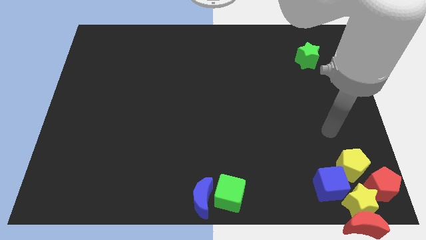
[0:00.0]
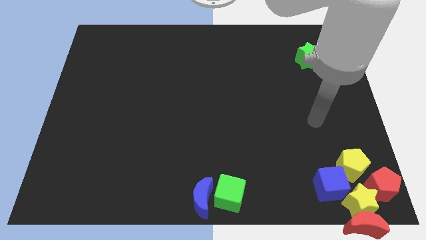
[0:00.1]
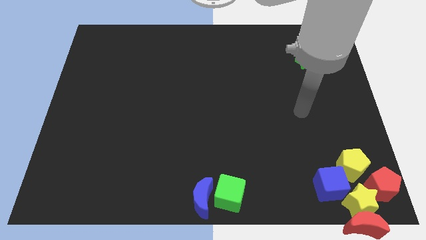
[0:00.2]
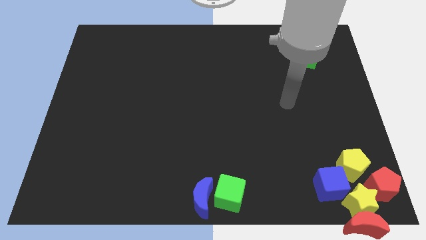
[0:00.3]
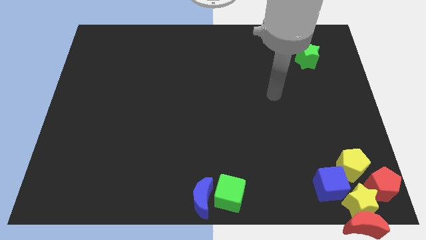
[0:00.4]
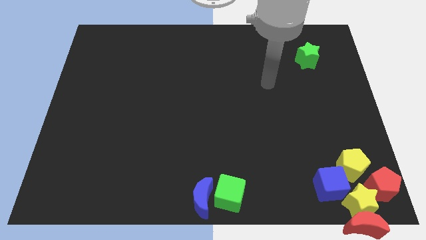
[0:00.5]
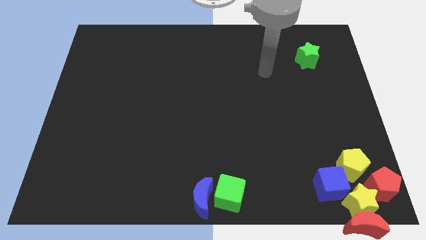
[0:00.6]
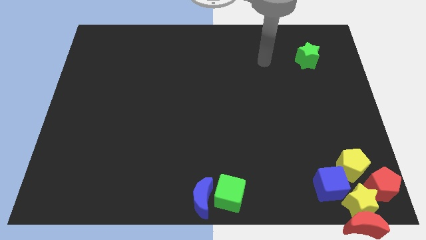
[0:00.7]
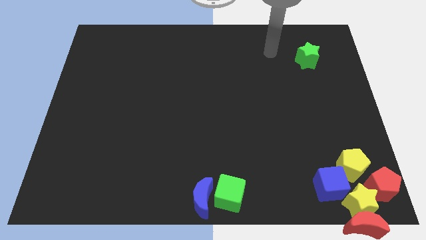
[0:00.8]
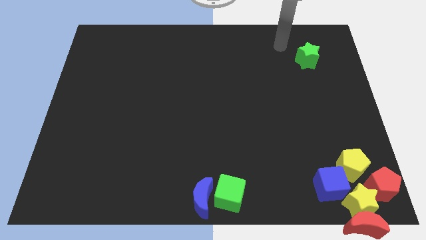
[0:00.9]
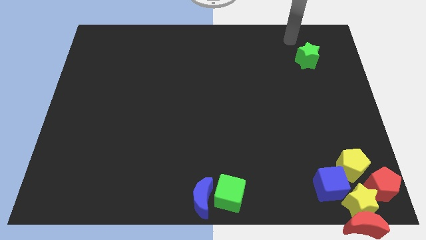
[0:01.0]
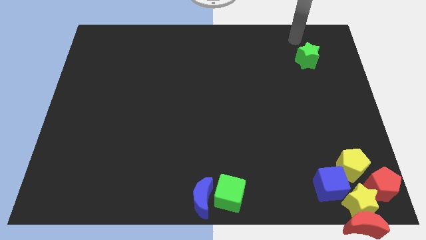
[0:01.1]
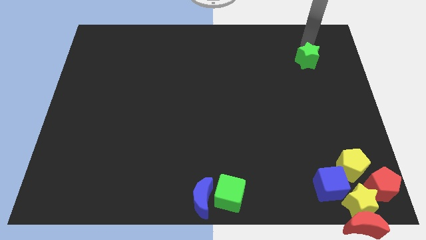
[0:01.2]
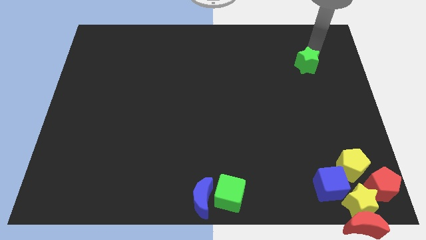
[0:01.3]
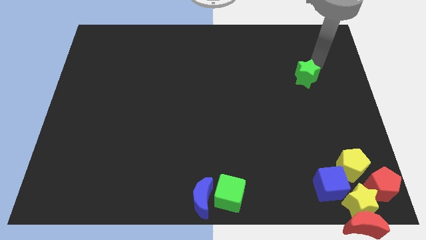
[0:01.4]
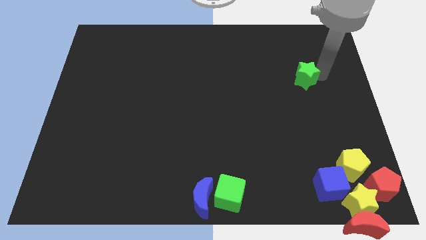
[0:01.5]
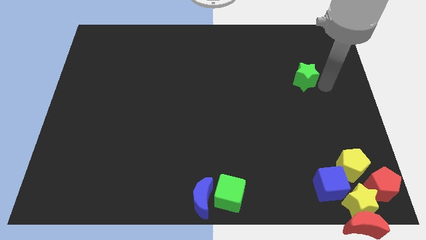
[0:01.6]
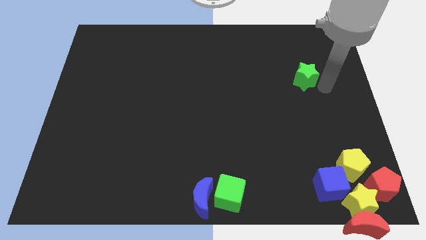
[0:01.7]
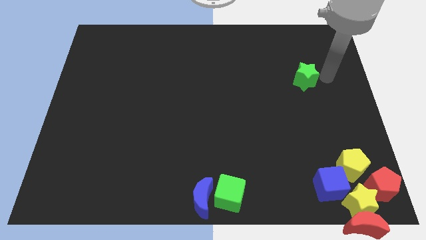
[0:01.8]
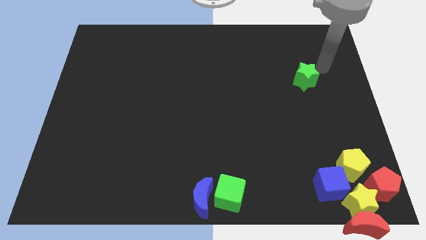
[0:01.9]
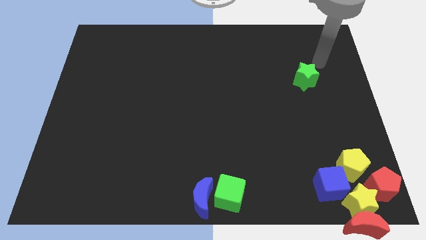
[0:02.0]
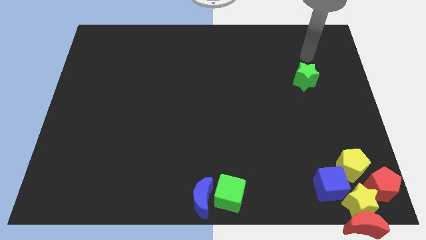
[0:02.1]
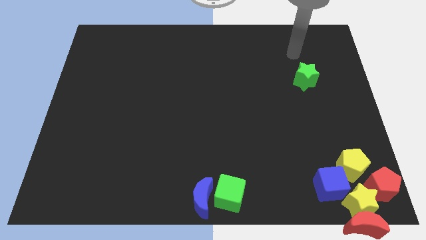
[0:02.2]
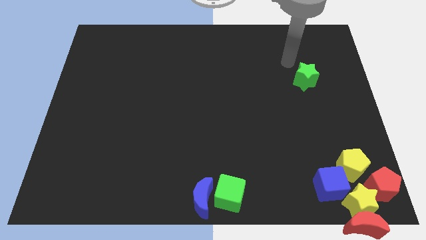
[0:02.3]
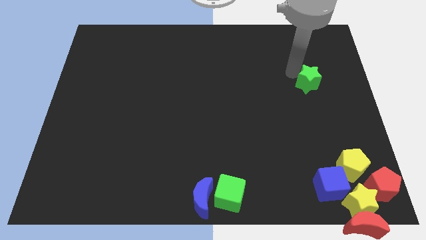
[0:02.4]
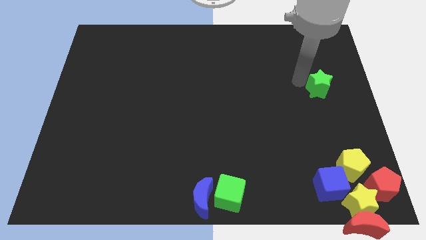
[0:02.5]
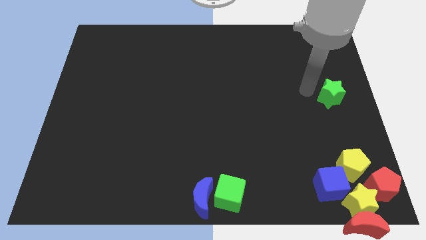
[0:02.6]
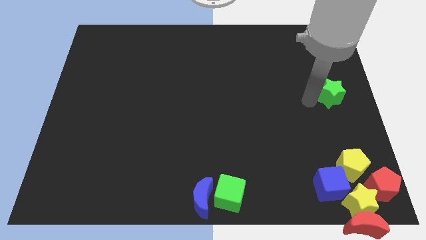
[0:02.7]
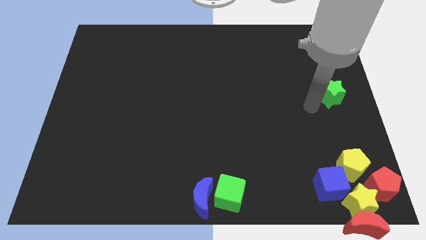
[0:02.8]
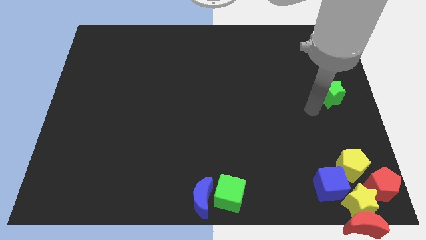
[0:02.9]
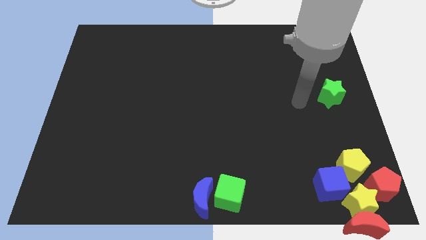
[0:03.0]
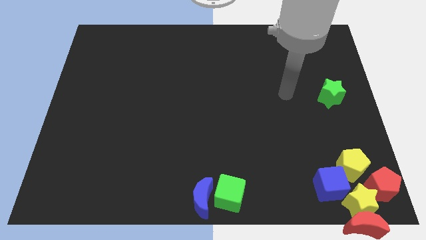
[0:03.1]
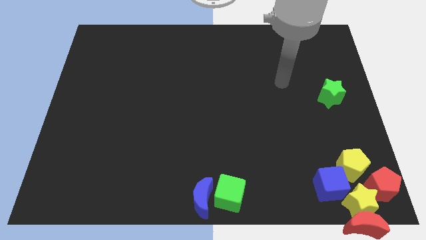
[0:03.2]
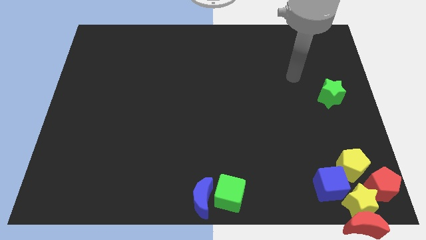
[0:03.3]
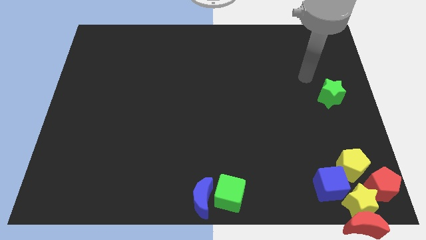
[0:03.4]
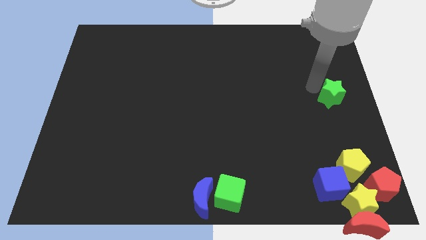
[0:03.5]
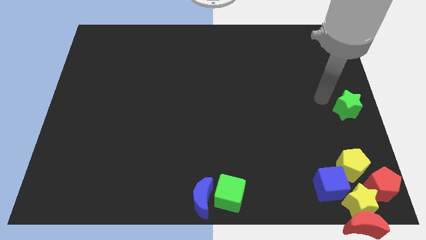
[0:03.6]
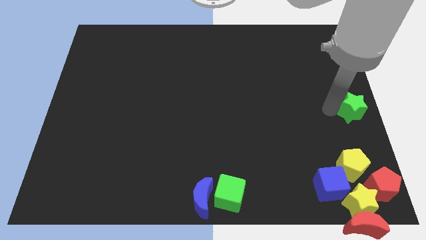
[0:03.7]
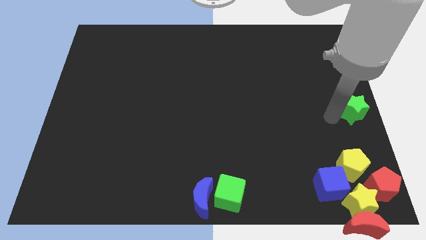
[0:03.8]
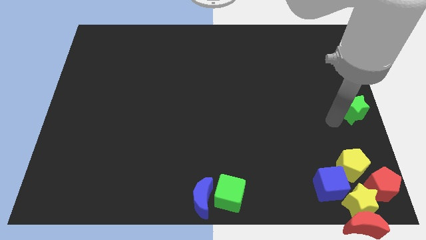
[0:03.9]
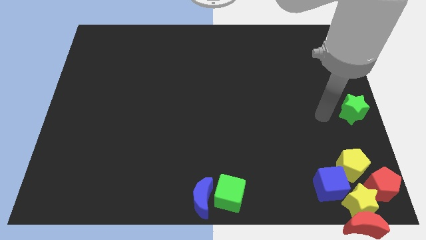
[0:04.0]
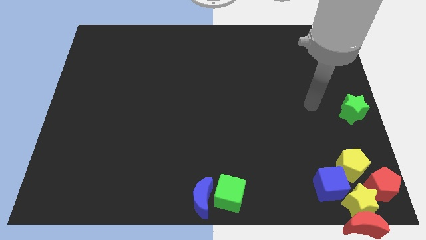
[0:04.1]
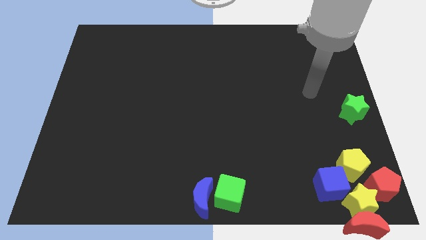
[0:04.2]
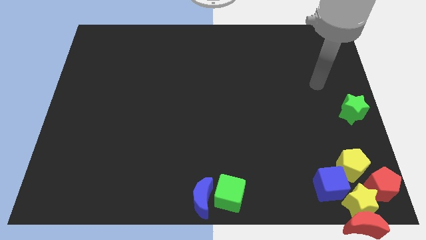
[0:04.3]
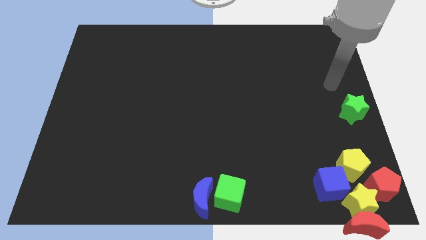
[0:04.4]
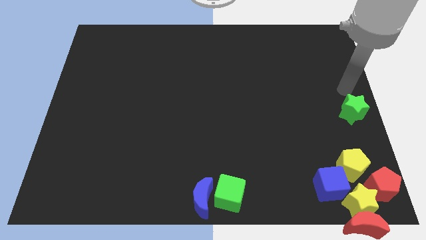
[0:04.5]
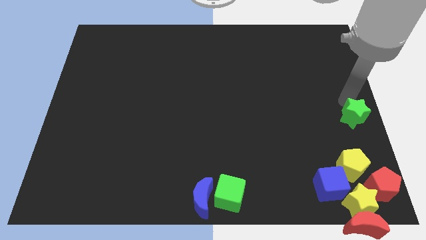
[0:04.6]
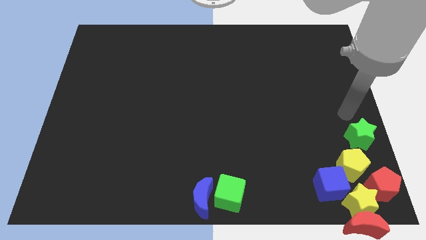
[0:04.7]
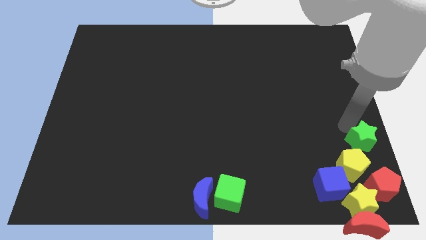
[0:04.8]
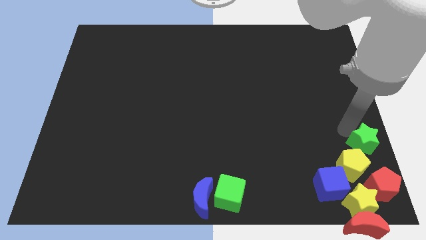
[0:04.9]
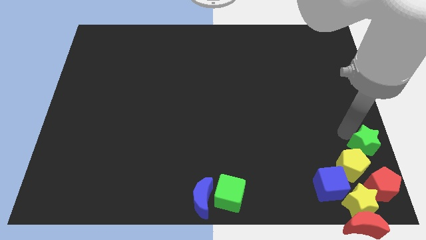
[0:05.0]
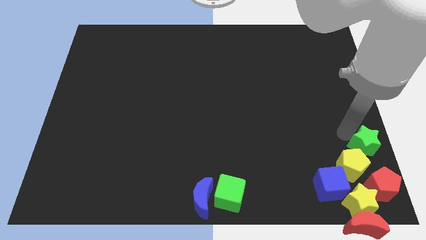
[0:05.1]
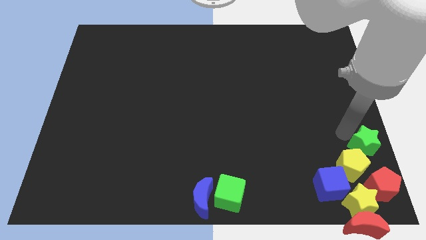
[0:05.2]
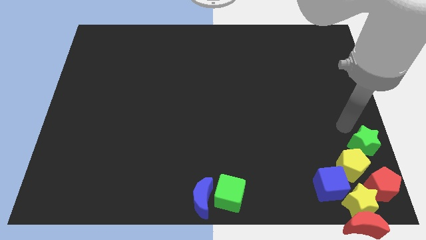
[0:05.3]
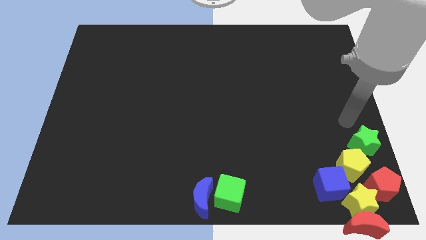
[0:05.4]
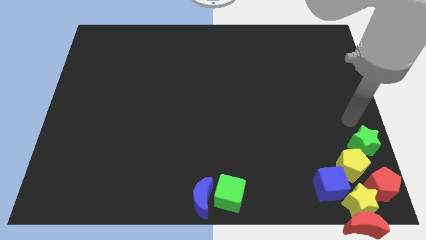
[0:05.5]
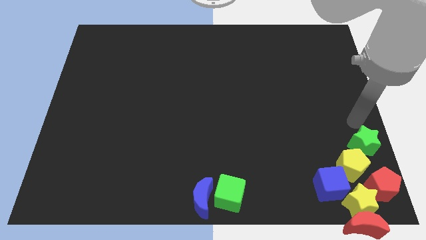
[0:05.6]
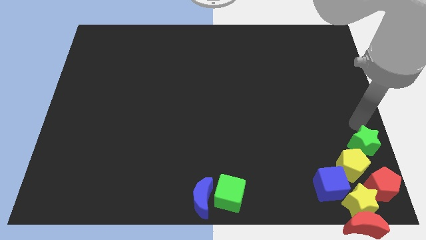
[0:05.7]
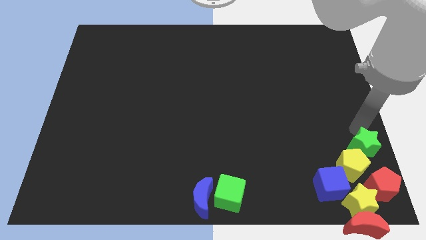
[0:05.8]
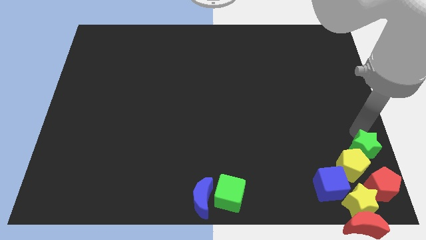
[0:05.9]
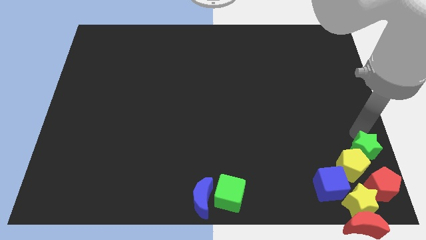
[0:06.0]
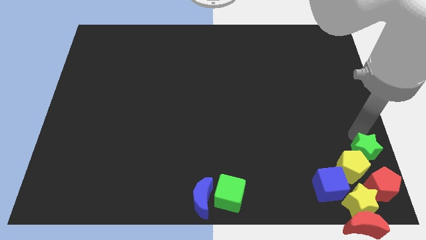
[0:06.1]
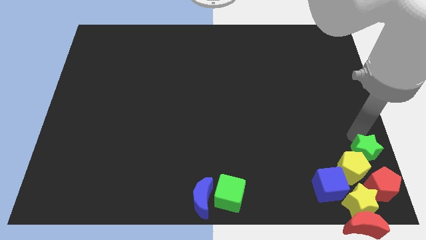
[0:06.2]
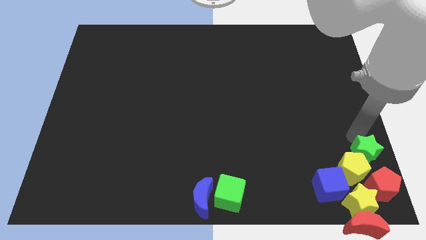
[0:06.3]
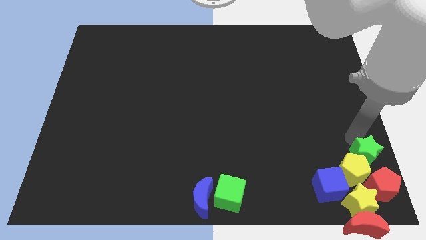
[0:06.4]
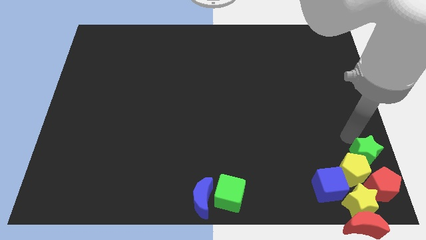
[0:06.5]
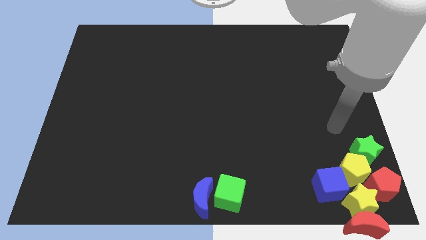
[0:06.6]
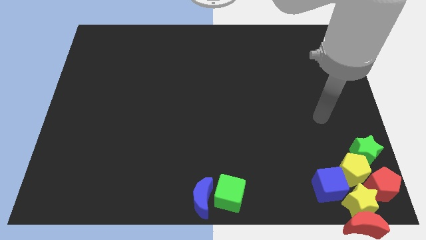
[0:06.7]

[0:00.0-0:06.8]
move the green star into the group of blocks

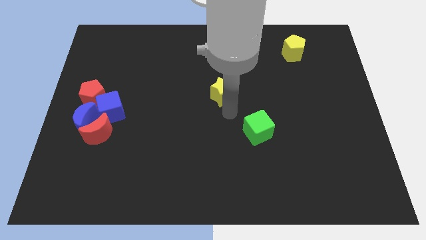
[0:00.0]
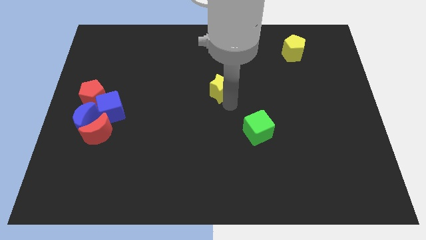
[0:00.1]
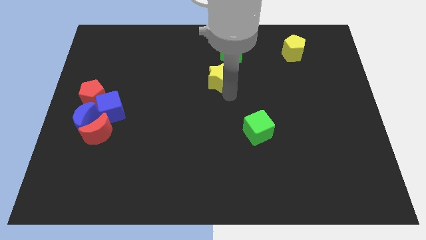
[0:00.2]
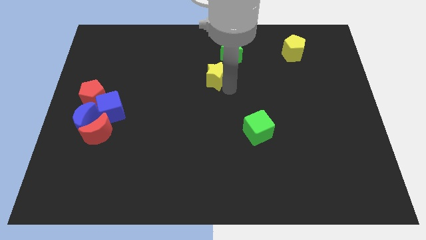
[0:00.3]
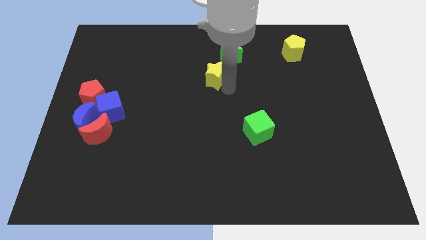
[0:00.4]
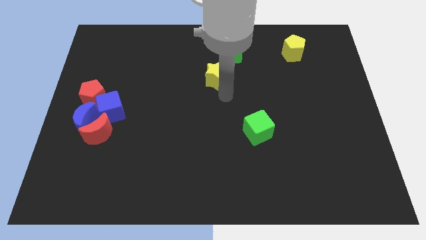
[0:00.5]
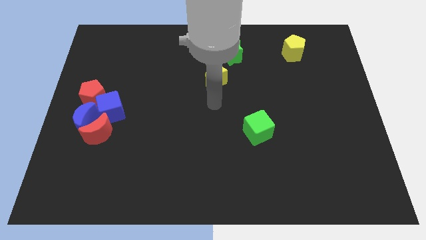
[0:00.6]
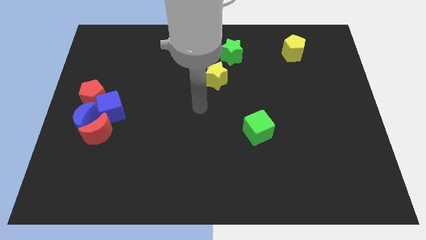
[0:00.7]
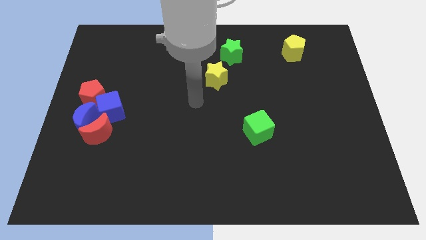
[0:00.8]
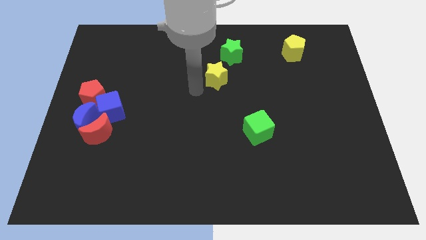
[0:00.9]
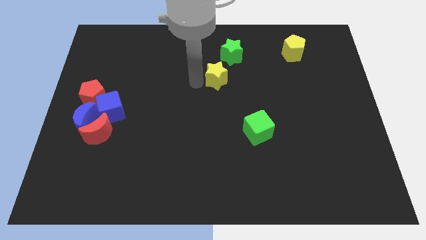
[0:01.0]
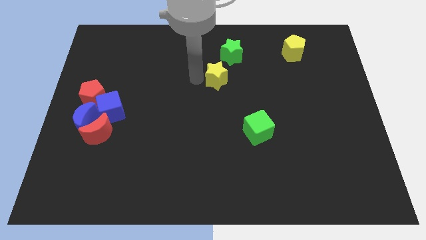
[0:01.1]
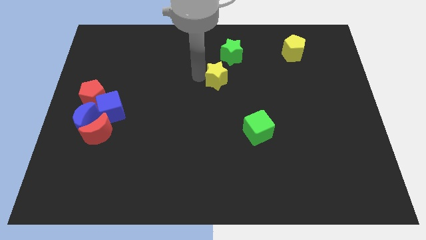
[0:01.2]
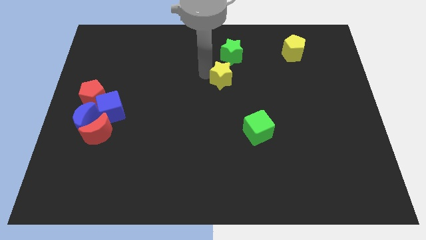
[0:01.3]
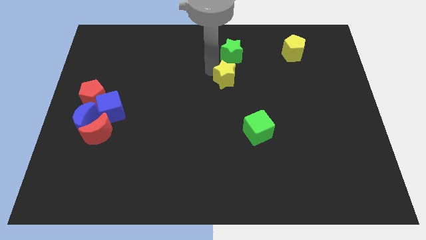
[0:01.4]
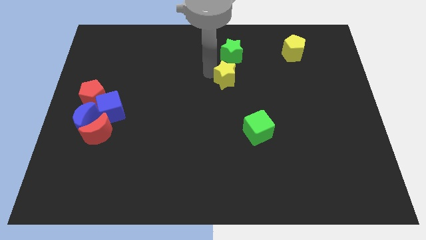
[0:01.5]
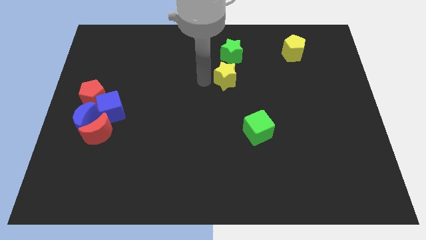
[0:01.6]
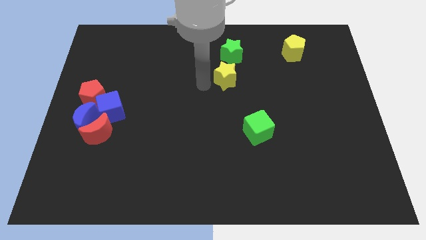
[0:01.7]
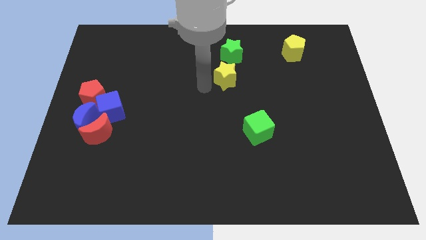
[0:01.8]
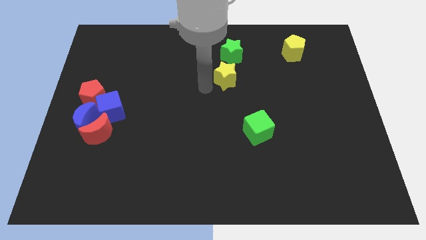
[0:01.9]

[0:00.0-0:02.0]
place the yellow star below the green star

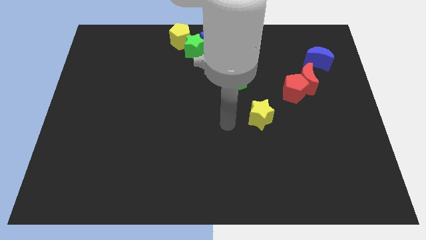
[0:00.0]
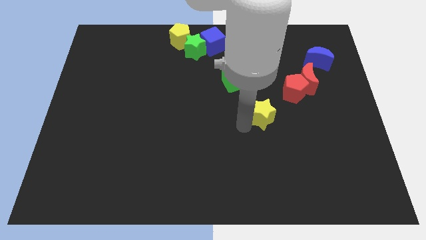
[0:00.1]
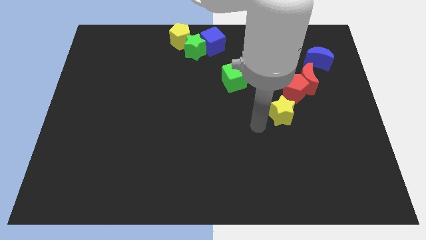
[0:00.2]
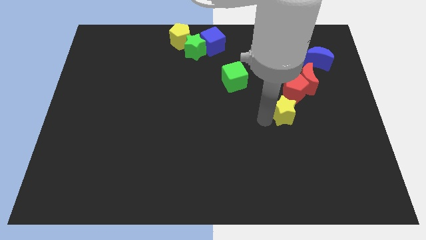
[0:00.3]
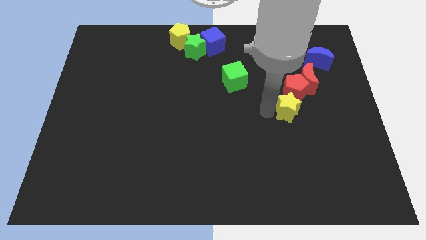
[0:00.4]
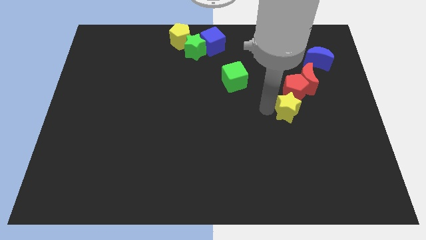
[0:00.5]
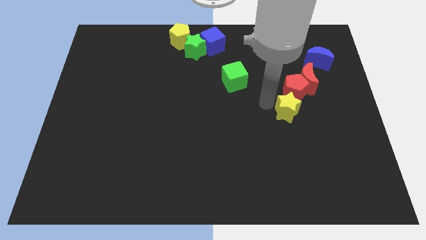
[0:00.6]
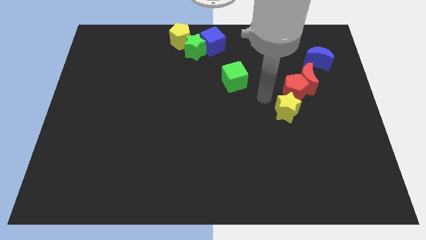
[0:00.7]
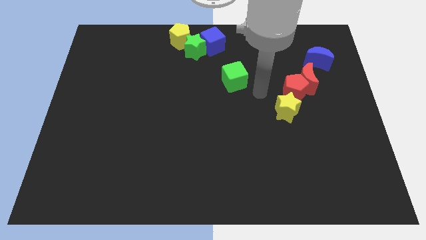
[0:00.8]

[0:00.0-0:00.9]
place the yellow star below the red pentagon
